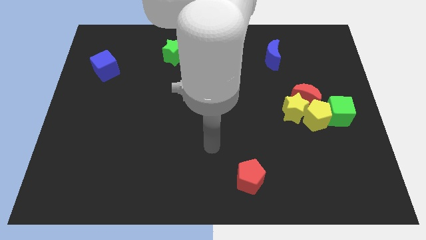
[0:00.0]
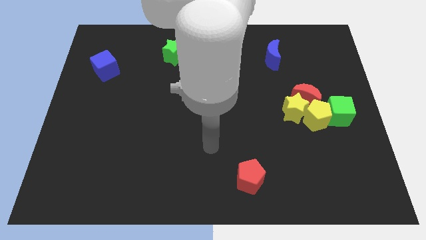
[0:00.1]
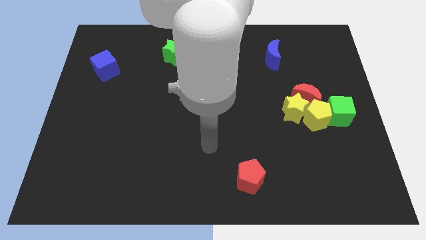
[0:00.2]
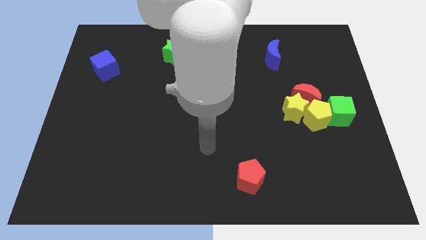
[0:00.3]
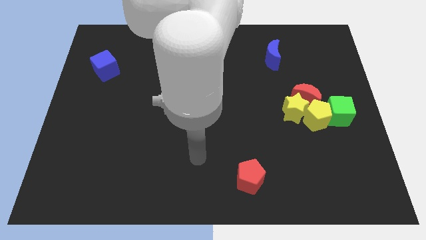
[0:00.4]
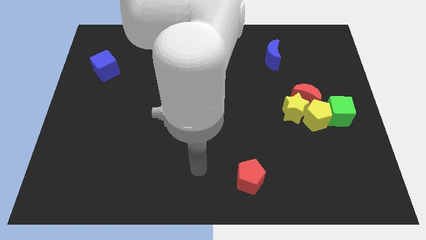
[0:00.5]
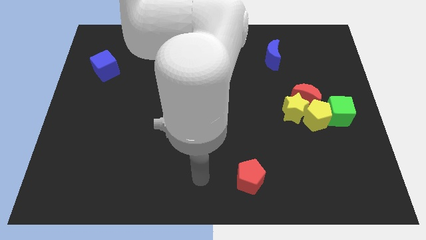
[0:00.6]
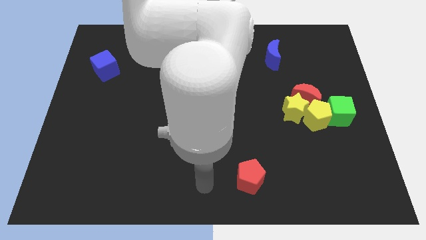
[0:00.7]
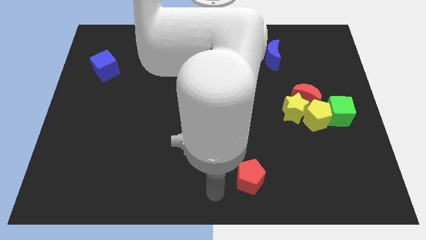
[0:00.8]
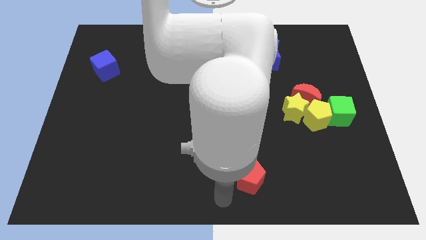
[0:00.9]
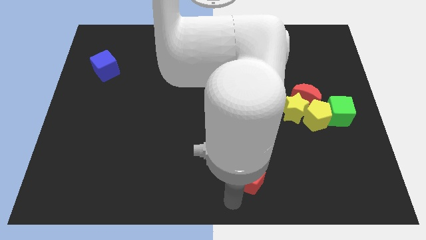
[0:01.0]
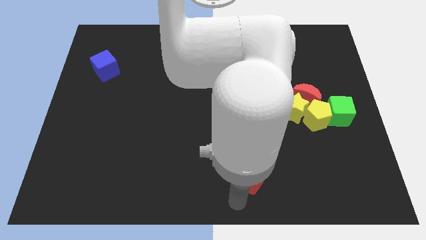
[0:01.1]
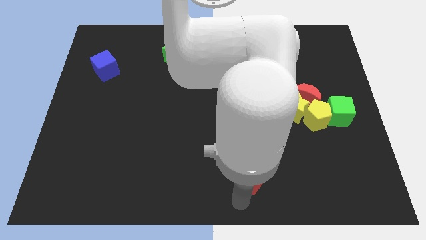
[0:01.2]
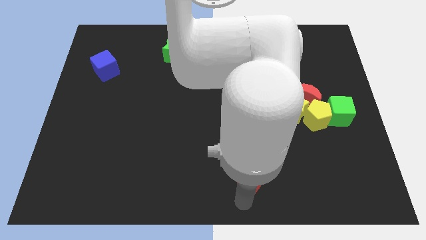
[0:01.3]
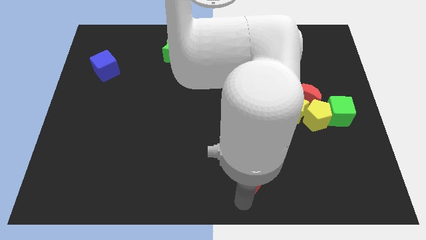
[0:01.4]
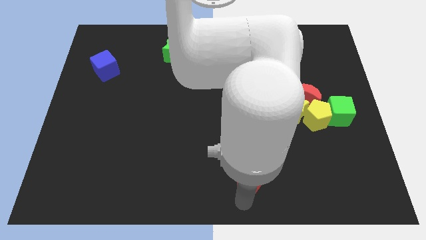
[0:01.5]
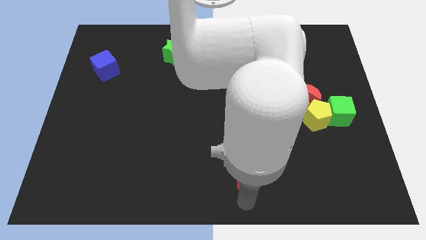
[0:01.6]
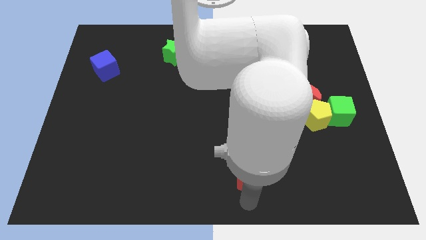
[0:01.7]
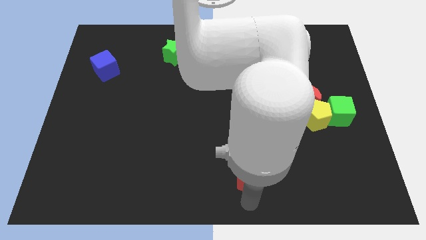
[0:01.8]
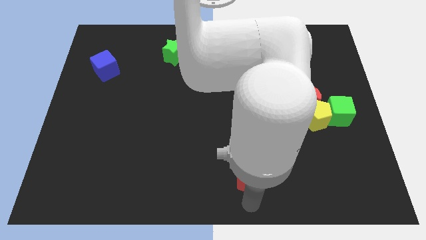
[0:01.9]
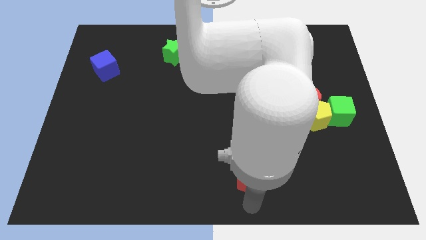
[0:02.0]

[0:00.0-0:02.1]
move your arm below the red pentagon

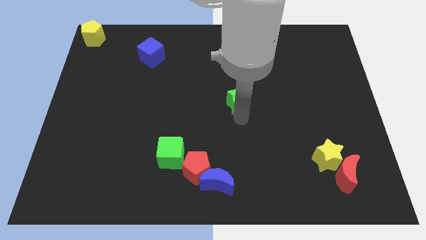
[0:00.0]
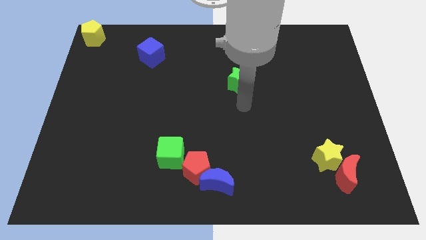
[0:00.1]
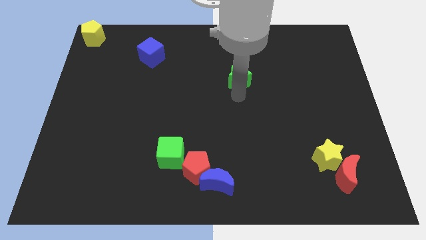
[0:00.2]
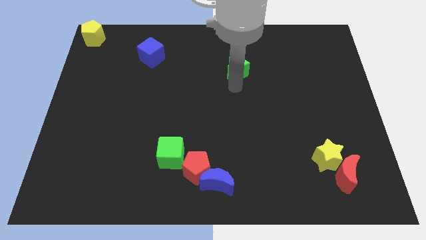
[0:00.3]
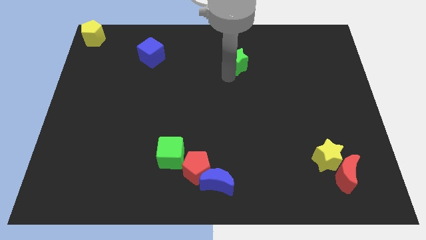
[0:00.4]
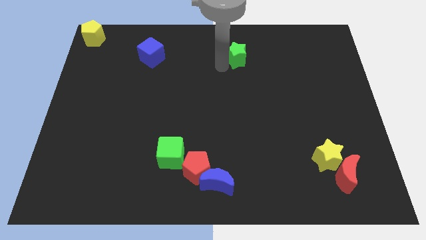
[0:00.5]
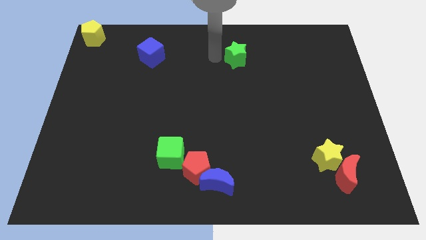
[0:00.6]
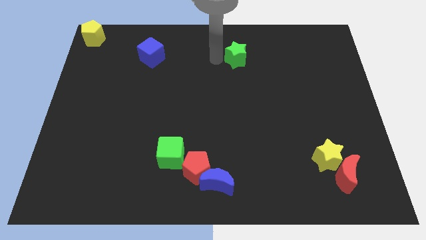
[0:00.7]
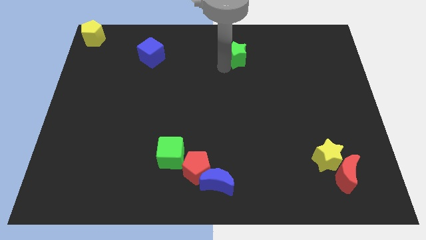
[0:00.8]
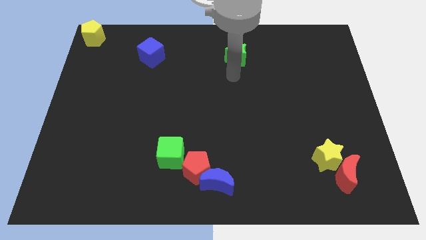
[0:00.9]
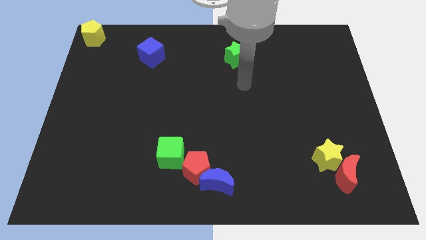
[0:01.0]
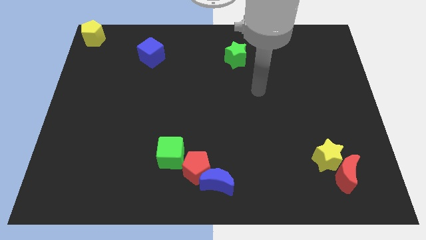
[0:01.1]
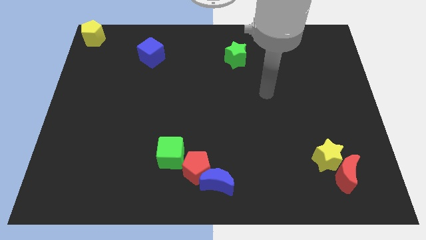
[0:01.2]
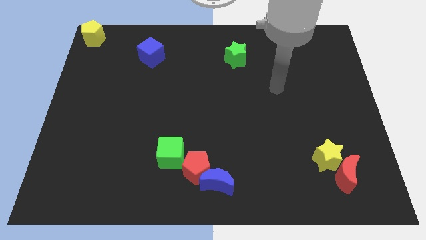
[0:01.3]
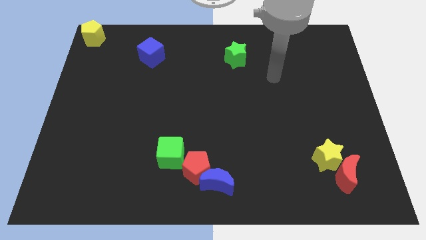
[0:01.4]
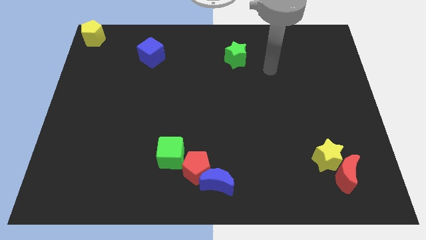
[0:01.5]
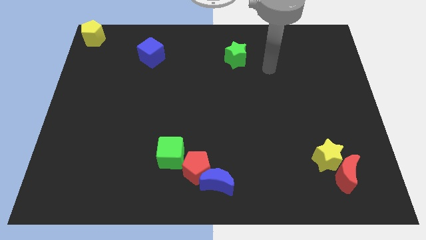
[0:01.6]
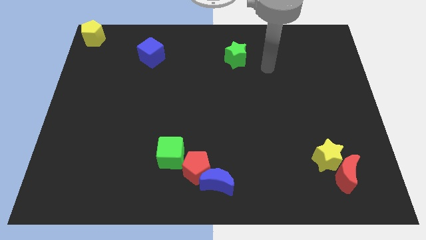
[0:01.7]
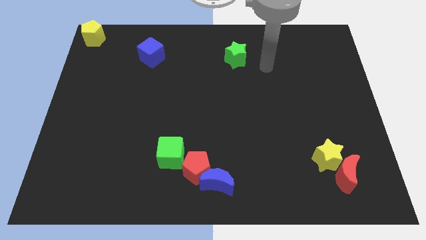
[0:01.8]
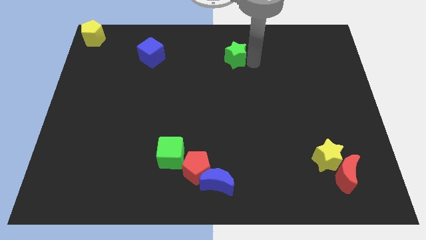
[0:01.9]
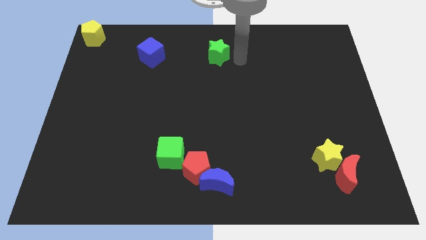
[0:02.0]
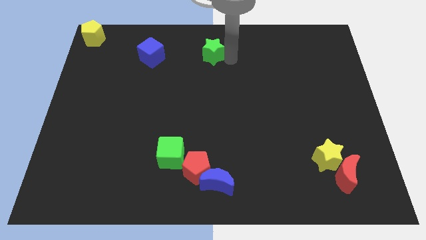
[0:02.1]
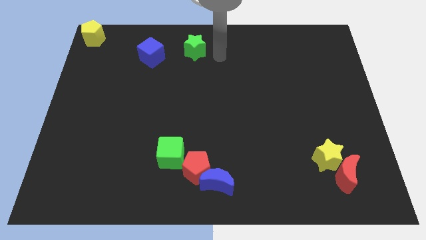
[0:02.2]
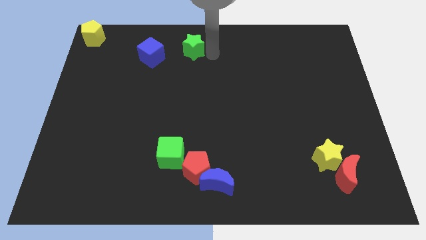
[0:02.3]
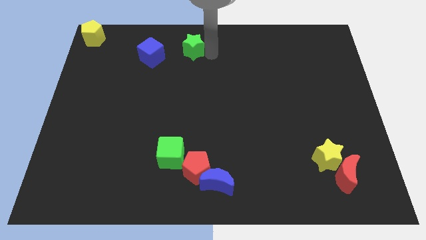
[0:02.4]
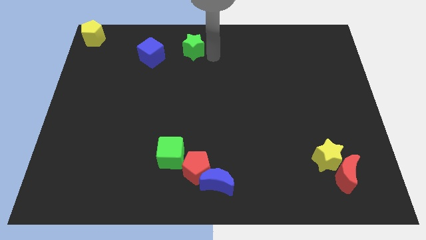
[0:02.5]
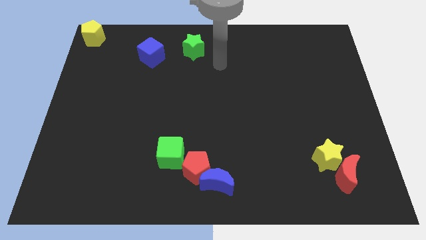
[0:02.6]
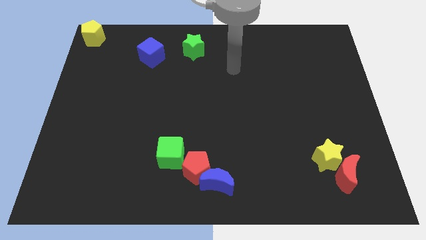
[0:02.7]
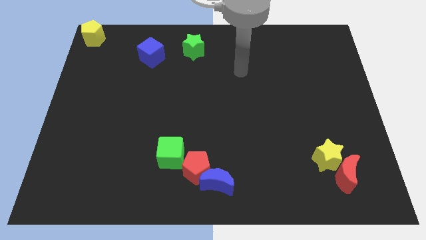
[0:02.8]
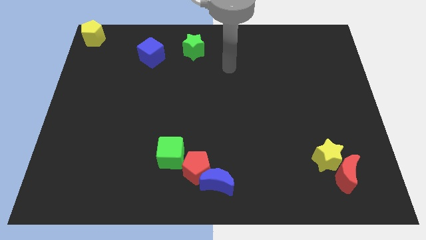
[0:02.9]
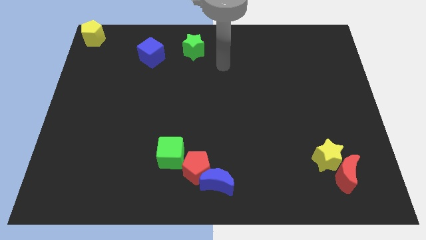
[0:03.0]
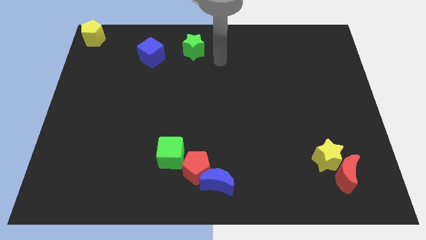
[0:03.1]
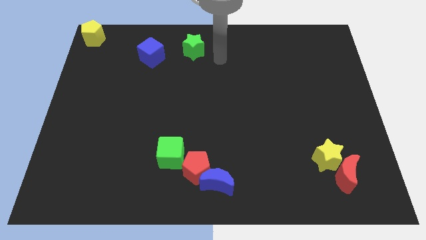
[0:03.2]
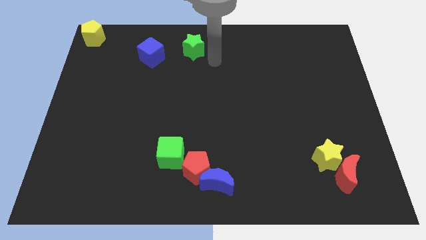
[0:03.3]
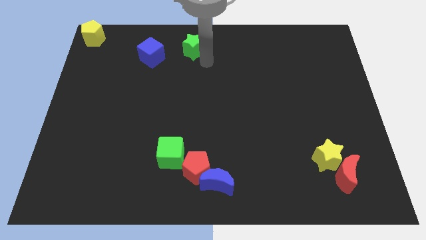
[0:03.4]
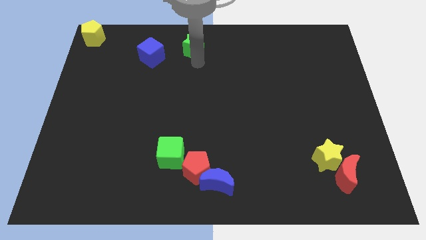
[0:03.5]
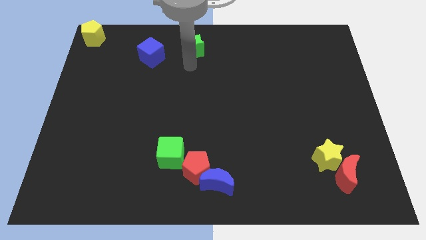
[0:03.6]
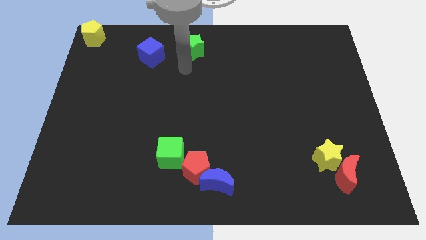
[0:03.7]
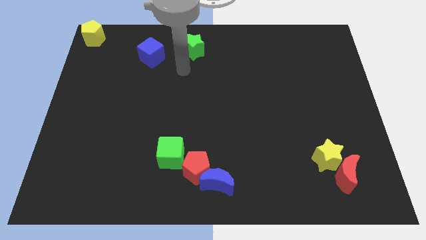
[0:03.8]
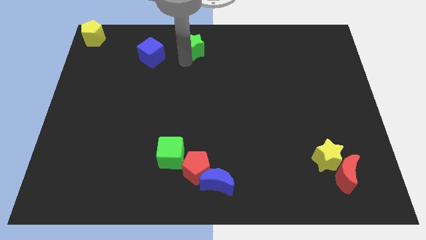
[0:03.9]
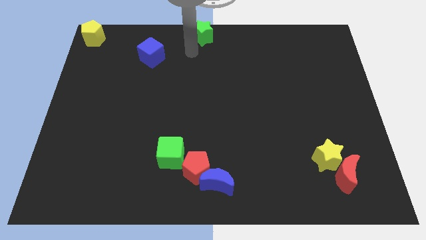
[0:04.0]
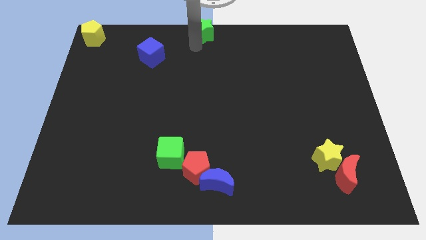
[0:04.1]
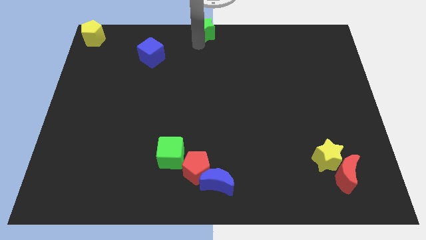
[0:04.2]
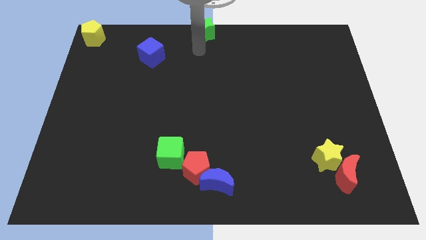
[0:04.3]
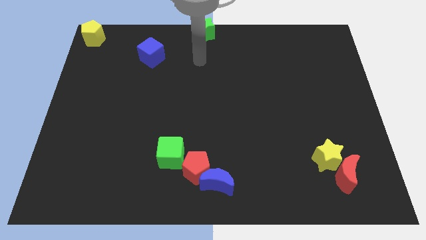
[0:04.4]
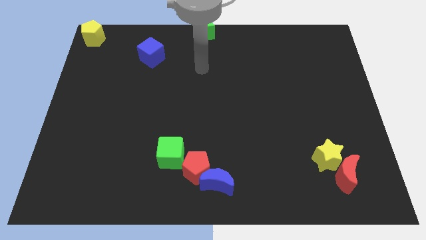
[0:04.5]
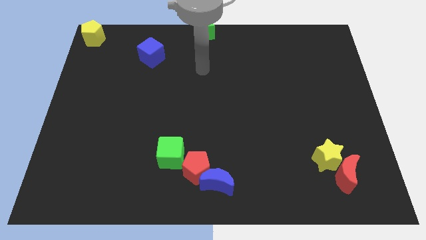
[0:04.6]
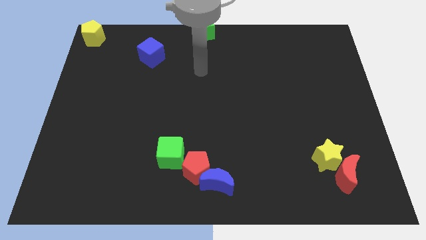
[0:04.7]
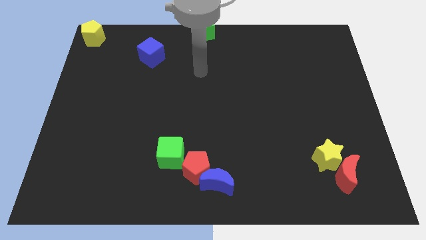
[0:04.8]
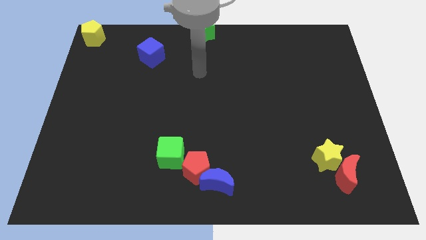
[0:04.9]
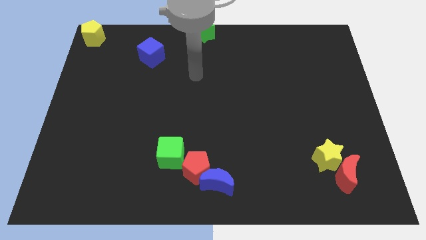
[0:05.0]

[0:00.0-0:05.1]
slide green star to top center

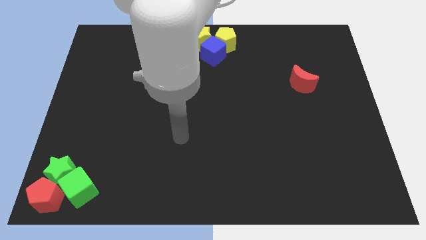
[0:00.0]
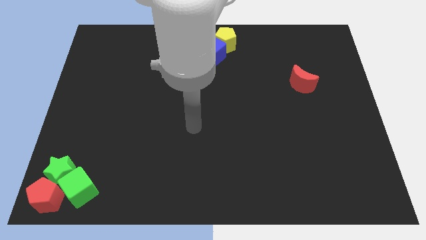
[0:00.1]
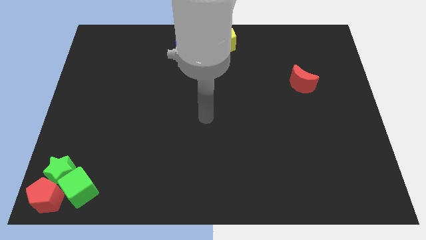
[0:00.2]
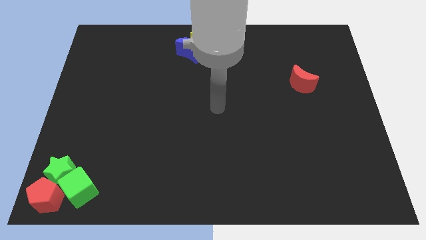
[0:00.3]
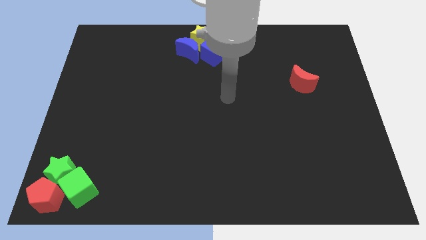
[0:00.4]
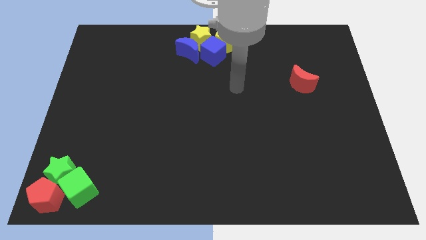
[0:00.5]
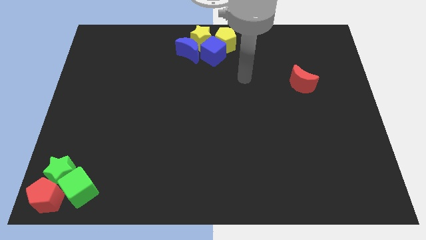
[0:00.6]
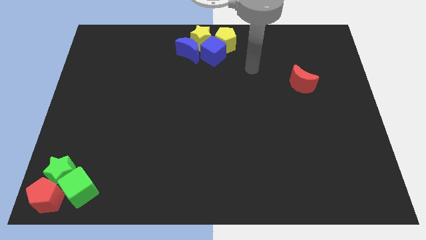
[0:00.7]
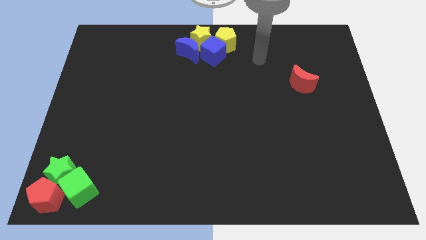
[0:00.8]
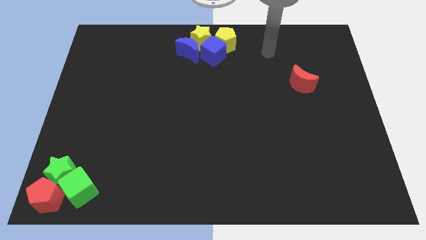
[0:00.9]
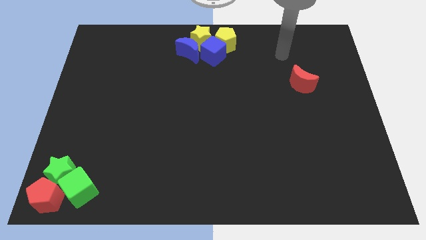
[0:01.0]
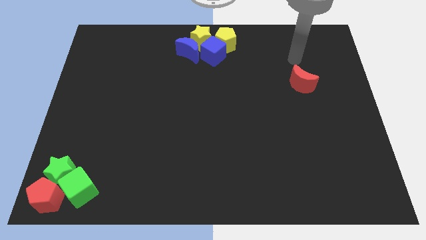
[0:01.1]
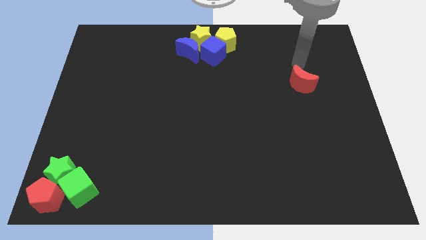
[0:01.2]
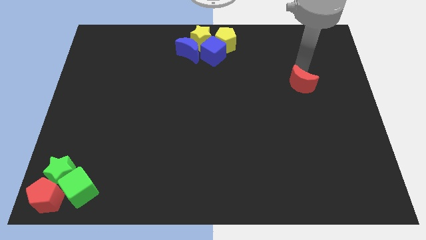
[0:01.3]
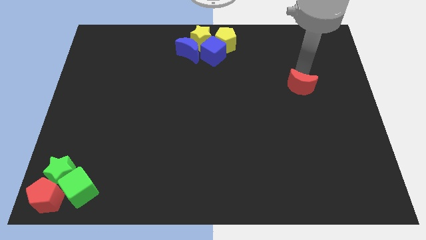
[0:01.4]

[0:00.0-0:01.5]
move the arm towards red crescent
